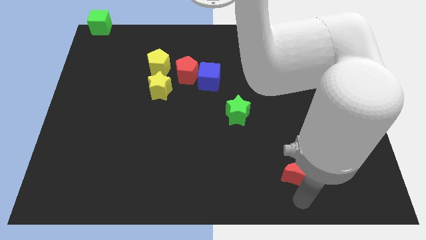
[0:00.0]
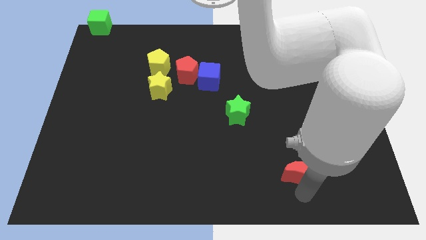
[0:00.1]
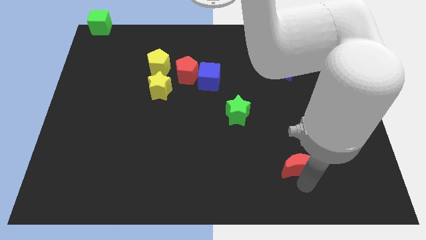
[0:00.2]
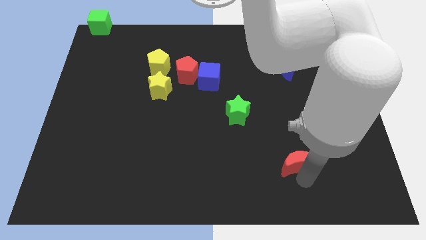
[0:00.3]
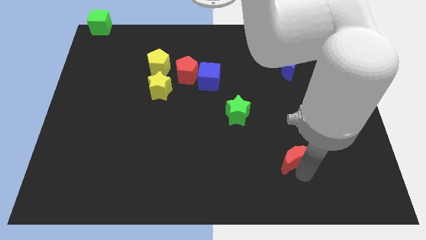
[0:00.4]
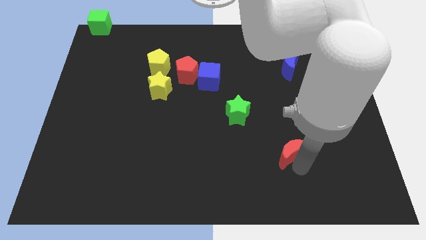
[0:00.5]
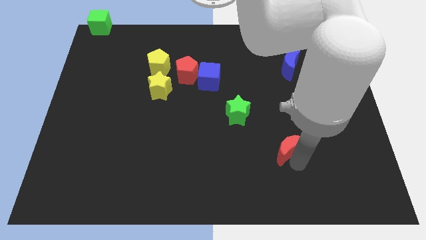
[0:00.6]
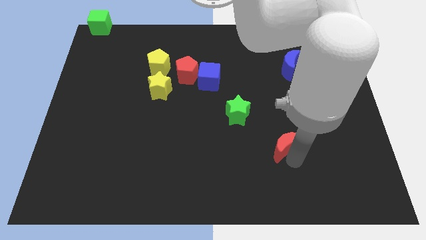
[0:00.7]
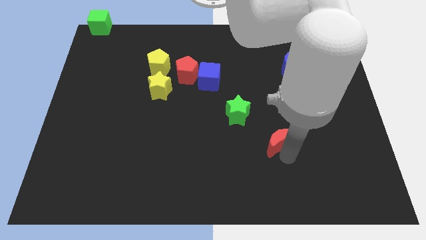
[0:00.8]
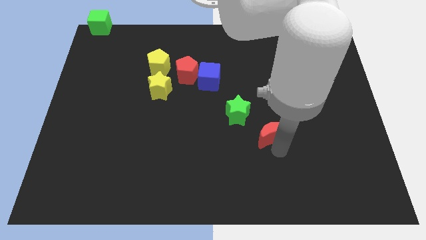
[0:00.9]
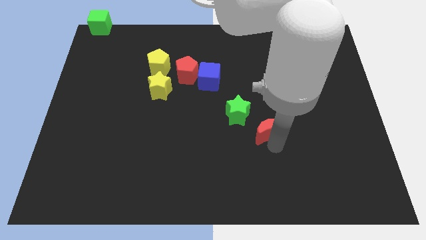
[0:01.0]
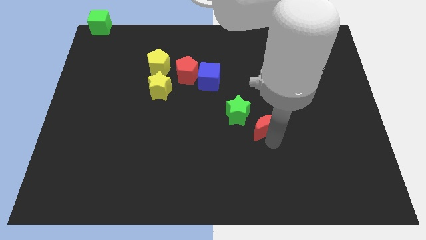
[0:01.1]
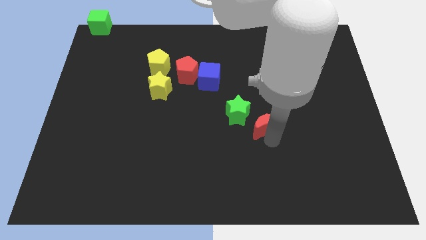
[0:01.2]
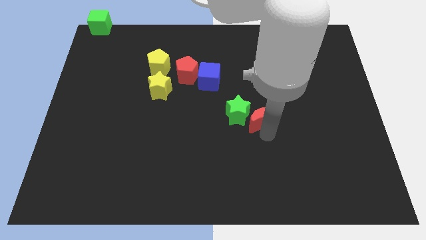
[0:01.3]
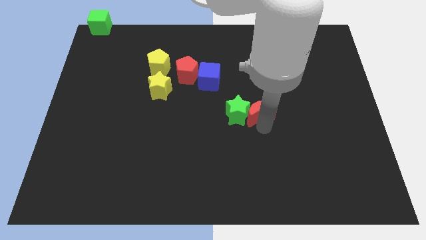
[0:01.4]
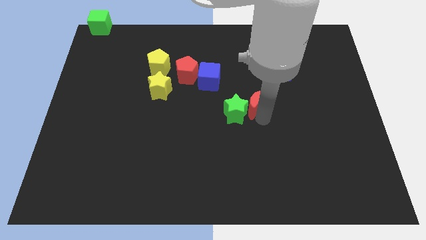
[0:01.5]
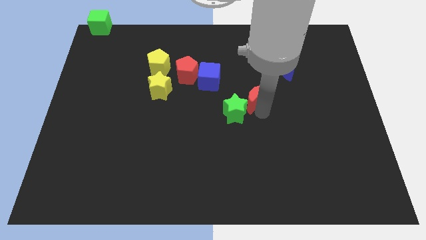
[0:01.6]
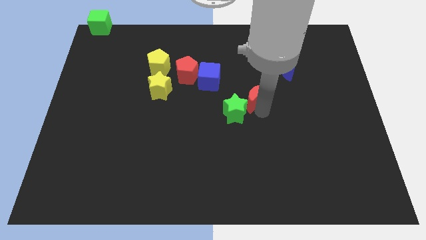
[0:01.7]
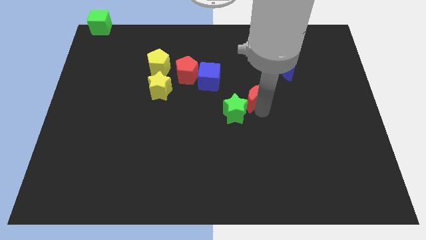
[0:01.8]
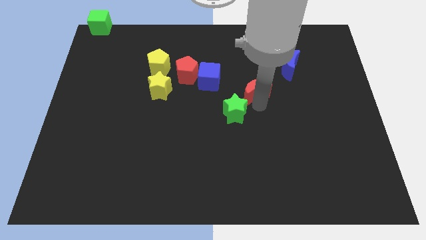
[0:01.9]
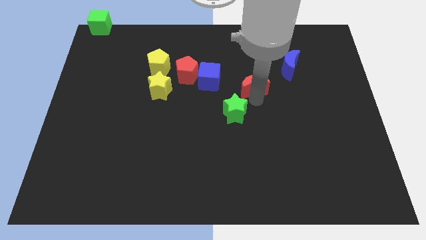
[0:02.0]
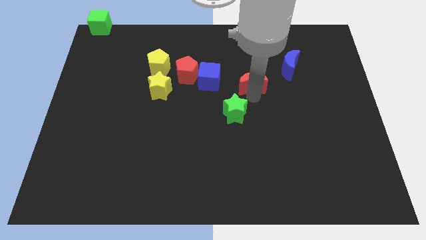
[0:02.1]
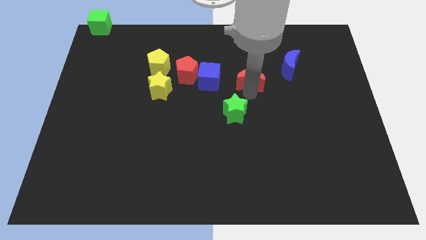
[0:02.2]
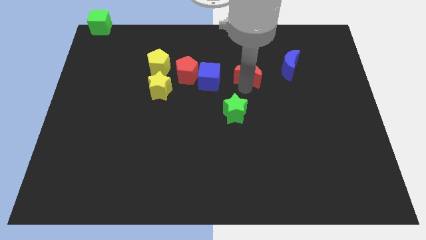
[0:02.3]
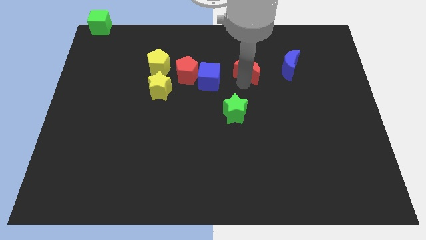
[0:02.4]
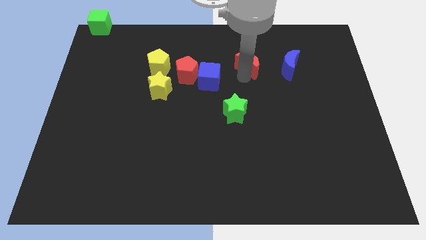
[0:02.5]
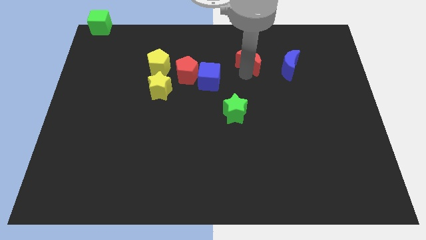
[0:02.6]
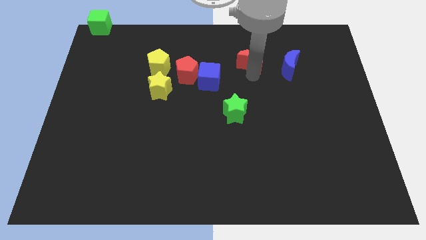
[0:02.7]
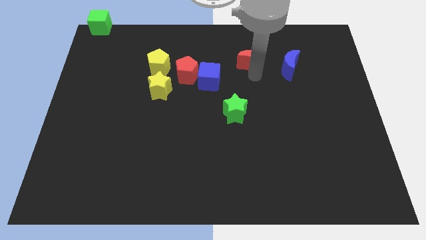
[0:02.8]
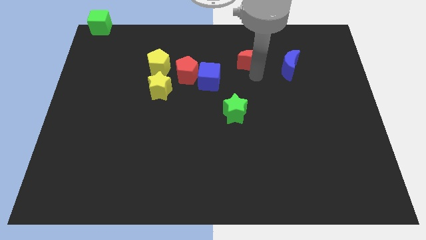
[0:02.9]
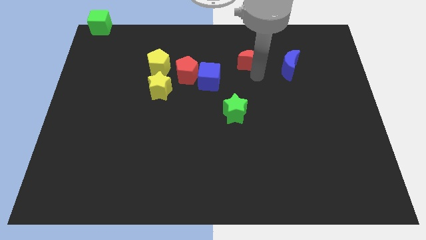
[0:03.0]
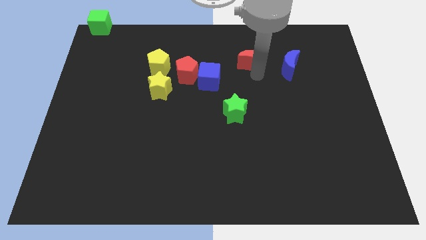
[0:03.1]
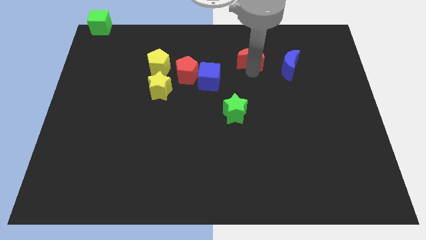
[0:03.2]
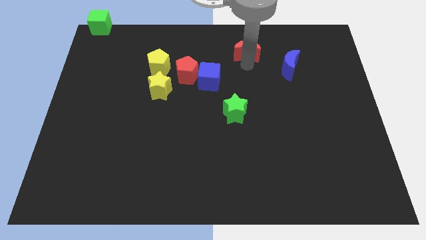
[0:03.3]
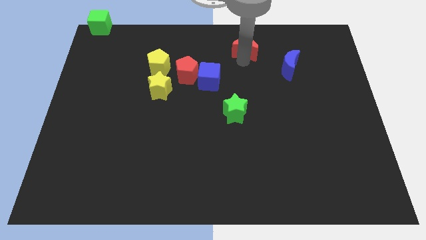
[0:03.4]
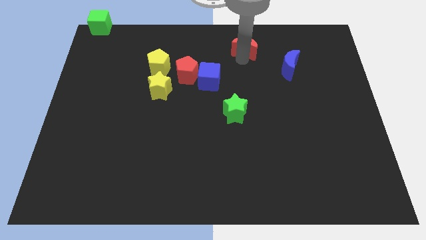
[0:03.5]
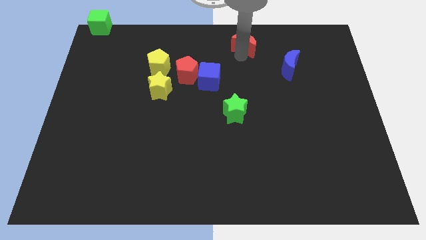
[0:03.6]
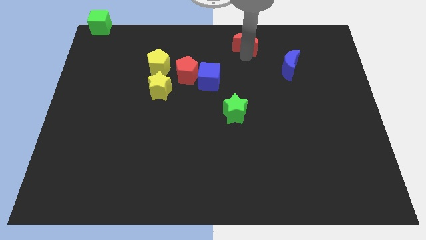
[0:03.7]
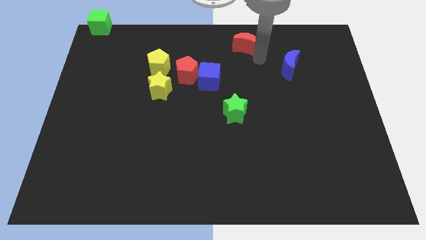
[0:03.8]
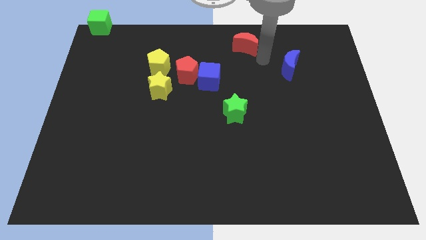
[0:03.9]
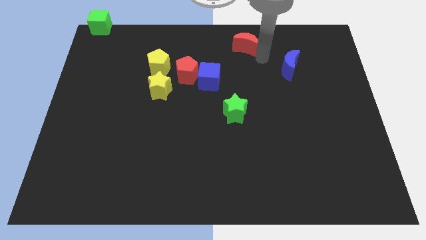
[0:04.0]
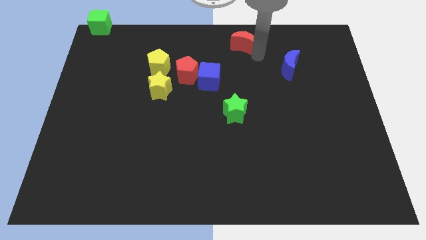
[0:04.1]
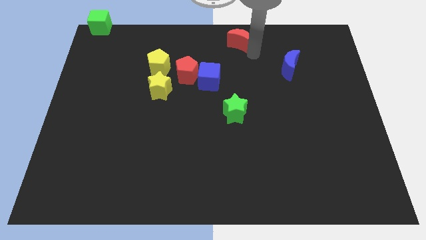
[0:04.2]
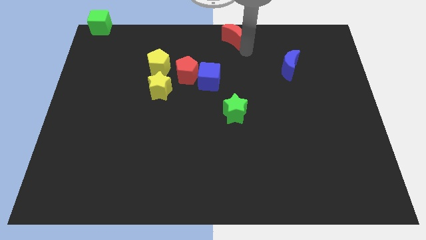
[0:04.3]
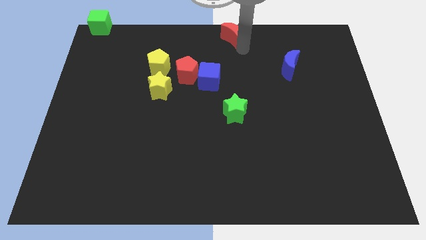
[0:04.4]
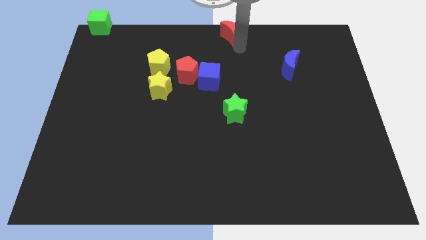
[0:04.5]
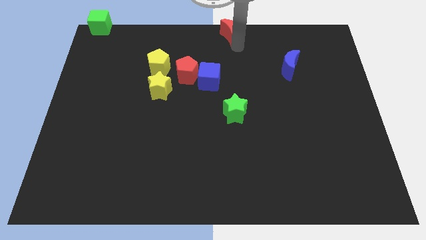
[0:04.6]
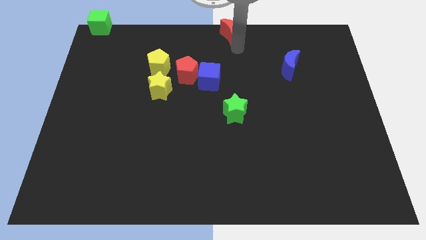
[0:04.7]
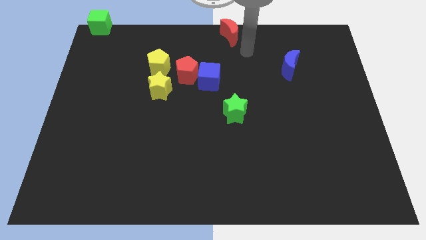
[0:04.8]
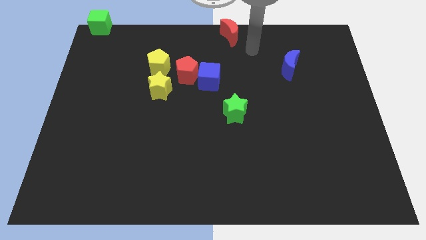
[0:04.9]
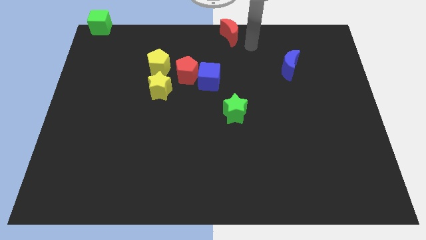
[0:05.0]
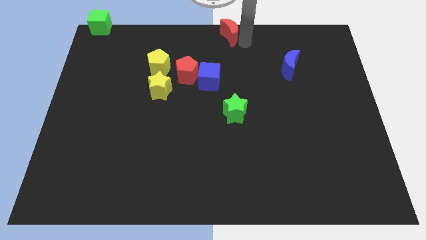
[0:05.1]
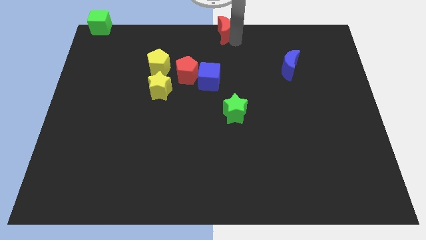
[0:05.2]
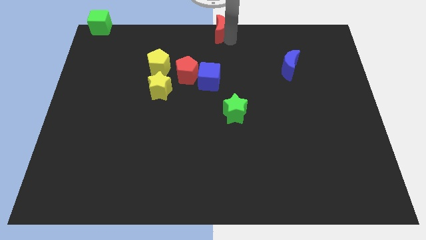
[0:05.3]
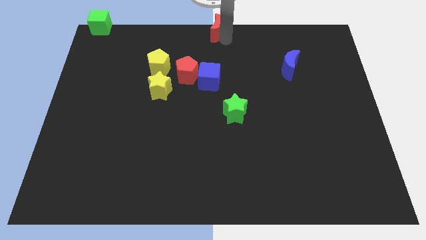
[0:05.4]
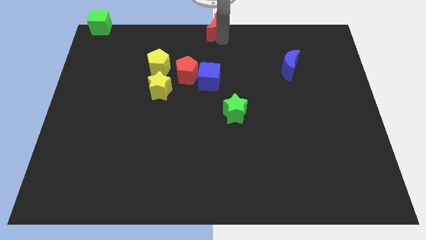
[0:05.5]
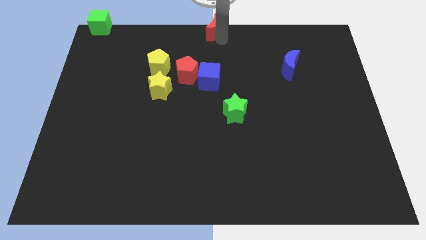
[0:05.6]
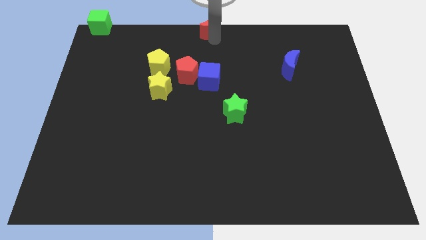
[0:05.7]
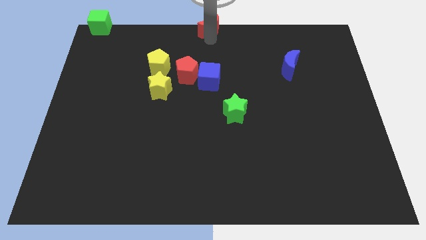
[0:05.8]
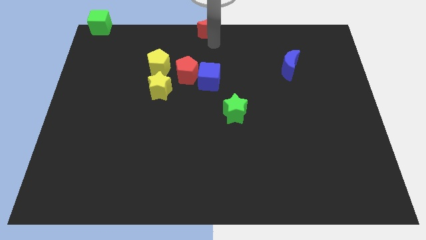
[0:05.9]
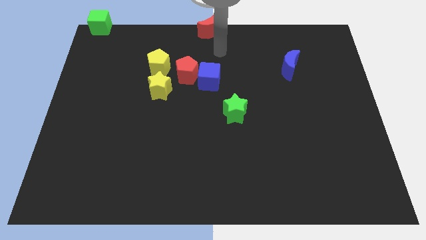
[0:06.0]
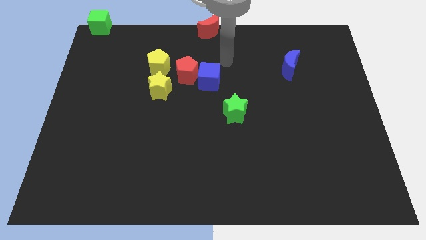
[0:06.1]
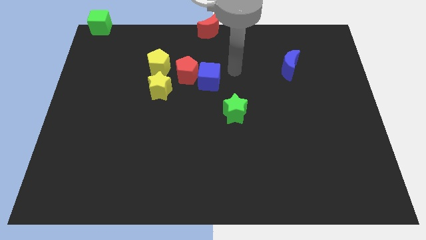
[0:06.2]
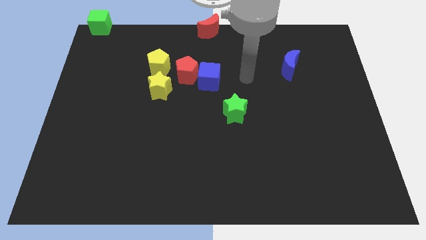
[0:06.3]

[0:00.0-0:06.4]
put the red crescent at the top center of the board

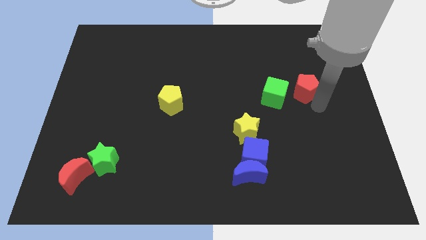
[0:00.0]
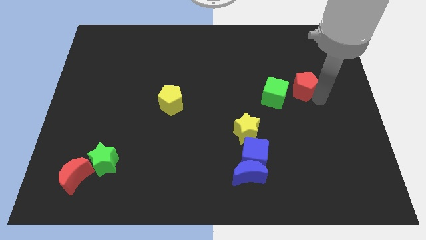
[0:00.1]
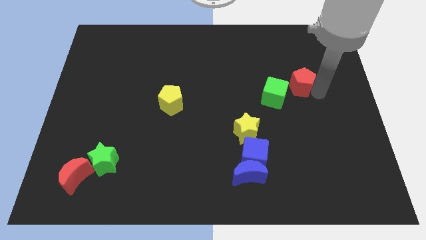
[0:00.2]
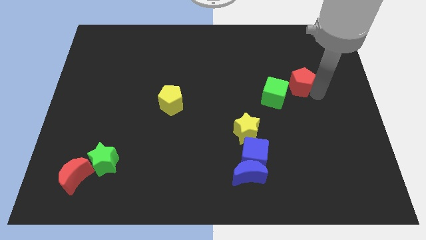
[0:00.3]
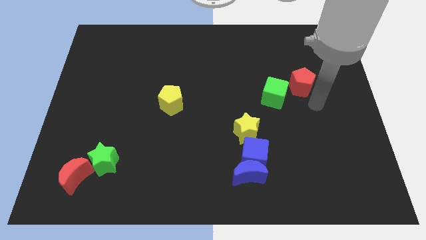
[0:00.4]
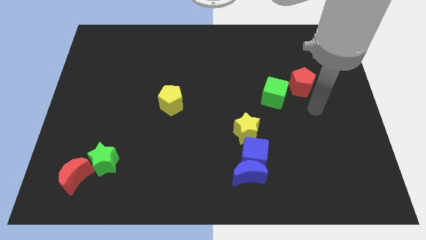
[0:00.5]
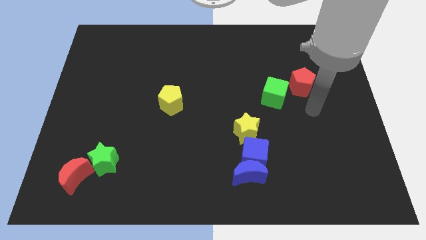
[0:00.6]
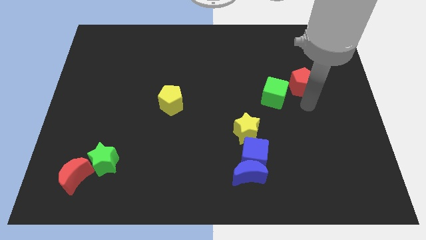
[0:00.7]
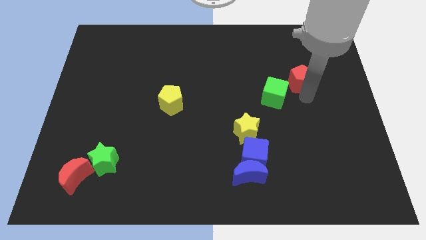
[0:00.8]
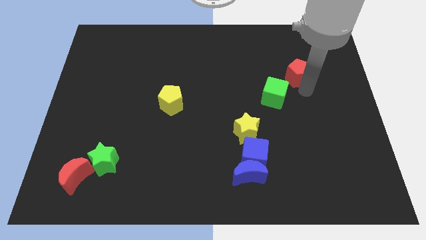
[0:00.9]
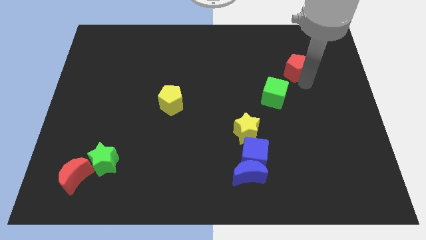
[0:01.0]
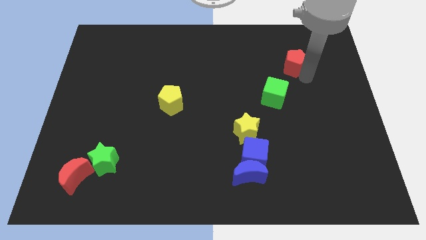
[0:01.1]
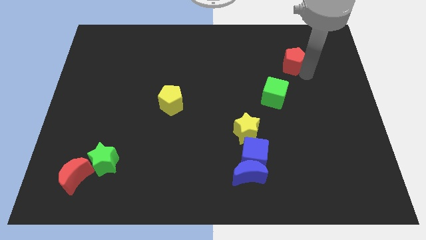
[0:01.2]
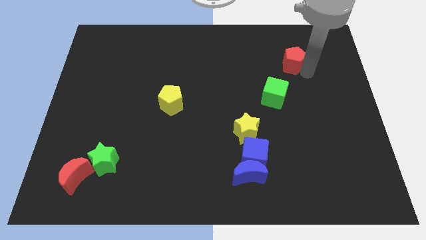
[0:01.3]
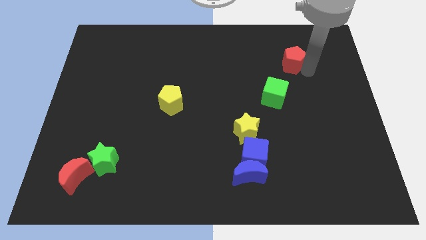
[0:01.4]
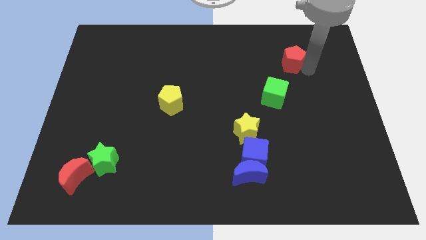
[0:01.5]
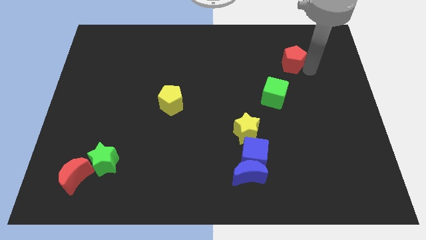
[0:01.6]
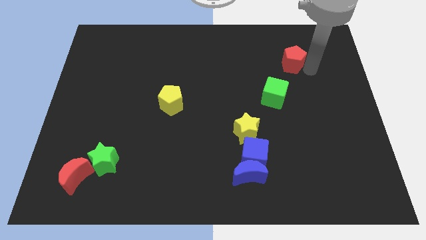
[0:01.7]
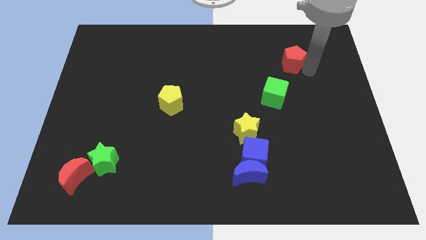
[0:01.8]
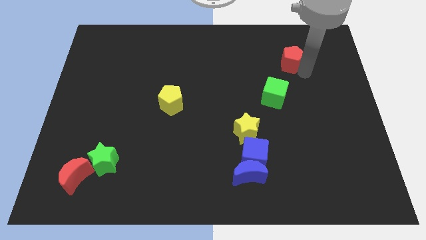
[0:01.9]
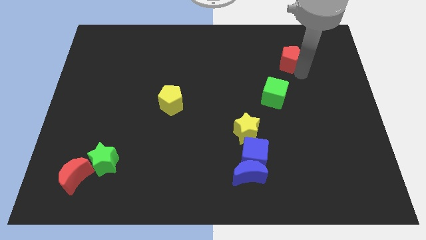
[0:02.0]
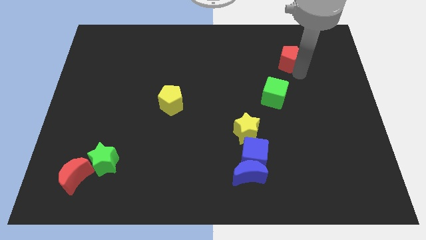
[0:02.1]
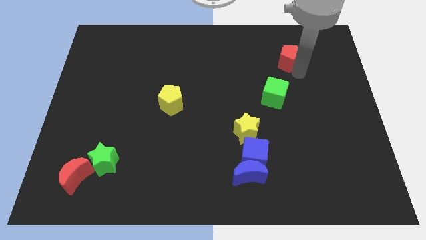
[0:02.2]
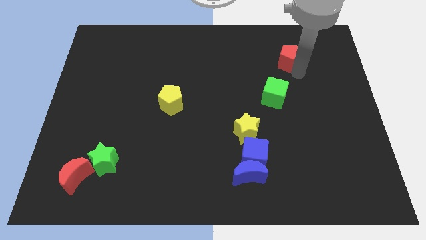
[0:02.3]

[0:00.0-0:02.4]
push the red pentagon to the top of the board

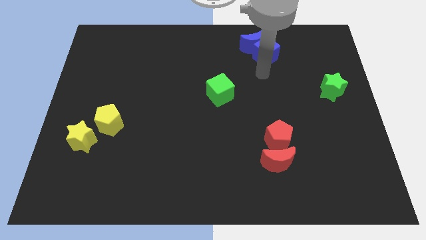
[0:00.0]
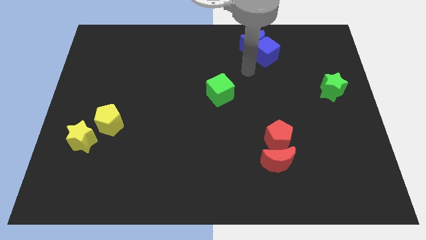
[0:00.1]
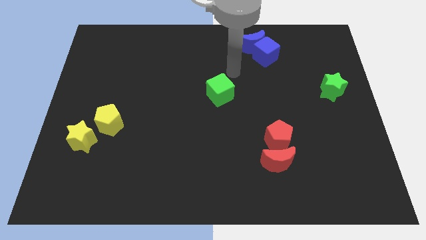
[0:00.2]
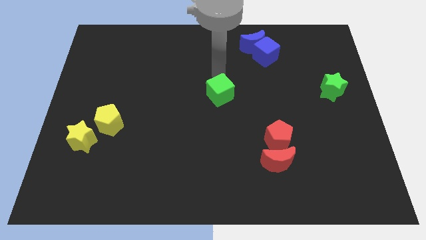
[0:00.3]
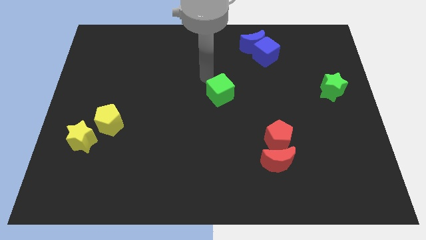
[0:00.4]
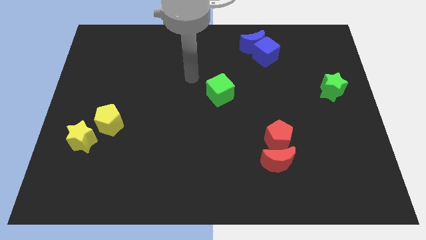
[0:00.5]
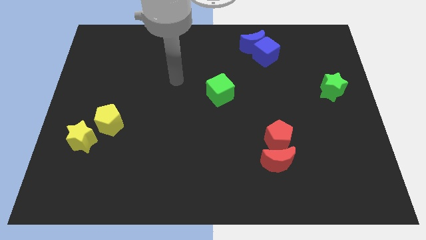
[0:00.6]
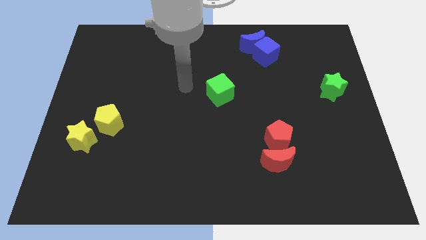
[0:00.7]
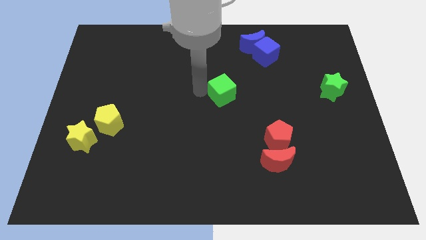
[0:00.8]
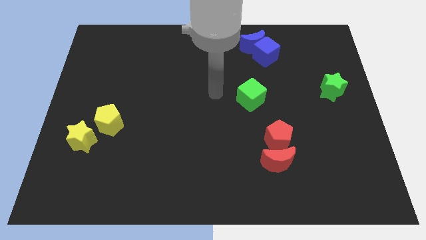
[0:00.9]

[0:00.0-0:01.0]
slide the green cube to the right
